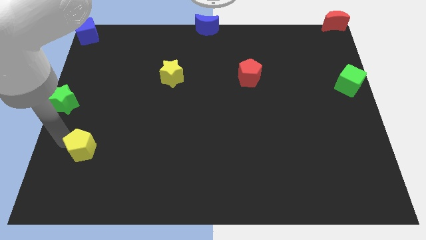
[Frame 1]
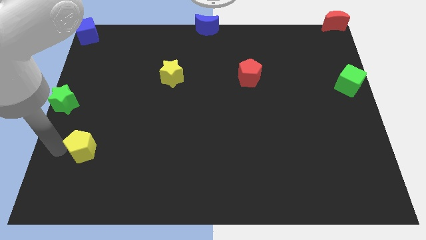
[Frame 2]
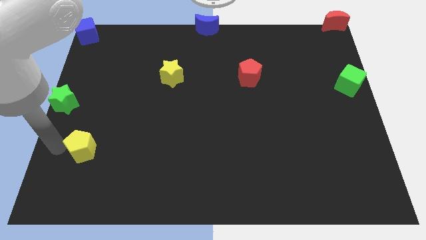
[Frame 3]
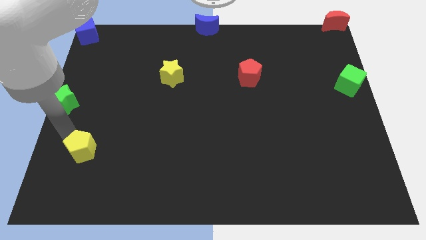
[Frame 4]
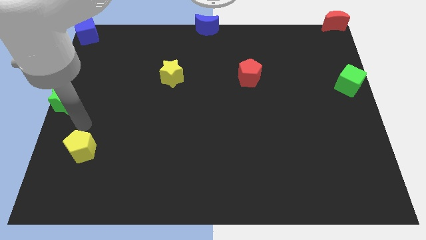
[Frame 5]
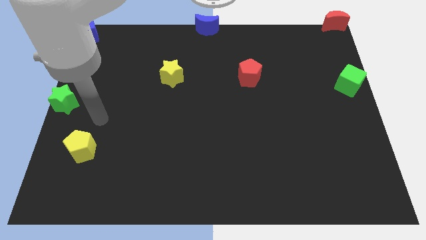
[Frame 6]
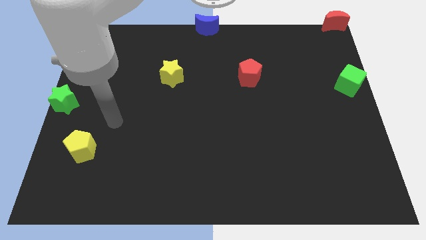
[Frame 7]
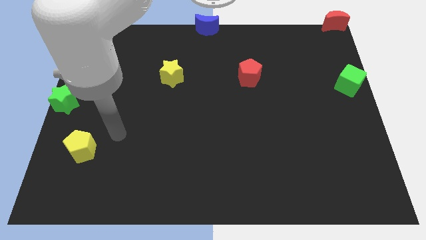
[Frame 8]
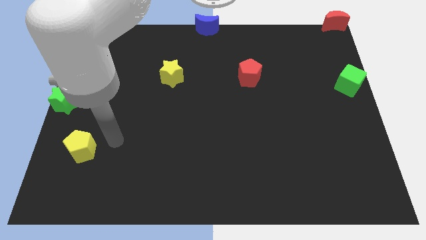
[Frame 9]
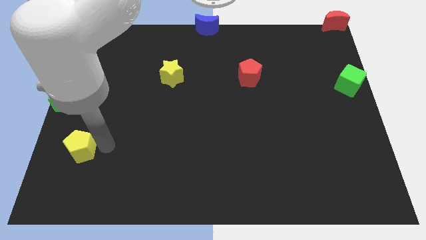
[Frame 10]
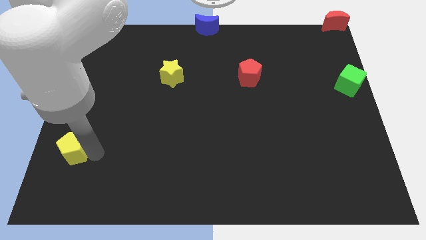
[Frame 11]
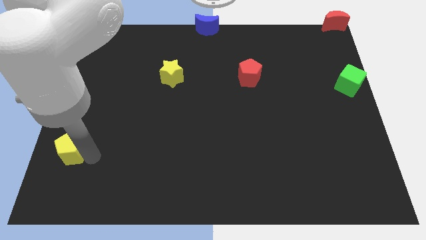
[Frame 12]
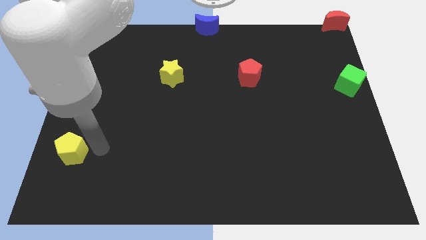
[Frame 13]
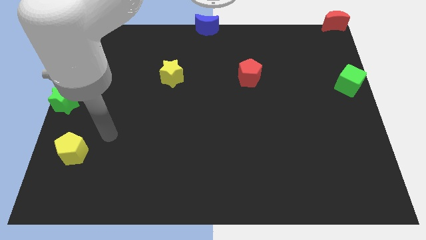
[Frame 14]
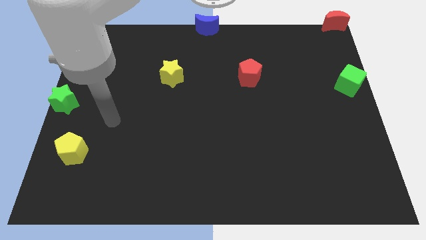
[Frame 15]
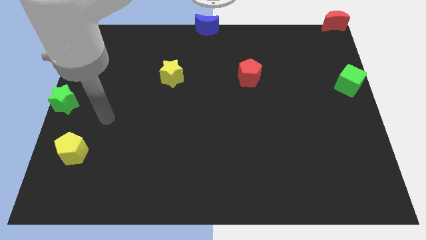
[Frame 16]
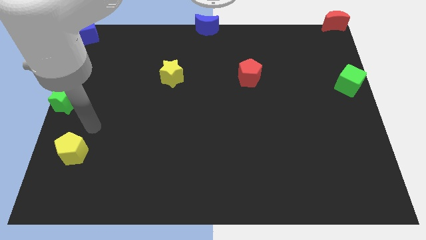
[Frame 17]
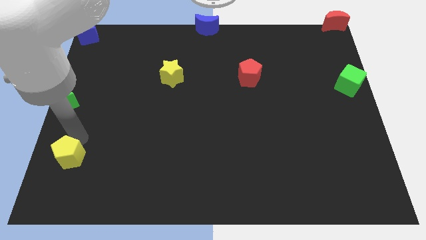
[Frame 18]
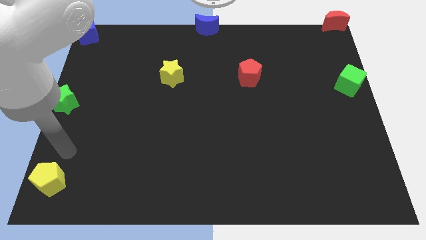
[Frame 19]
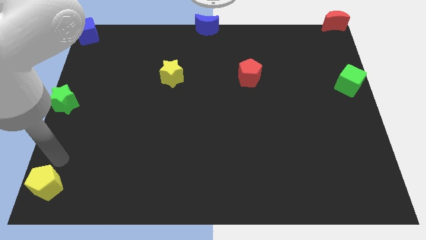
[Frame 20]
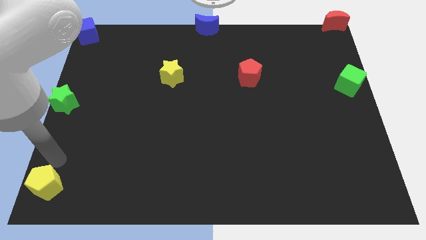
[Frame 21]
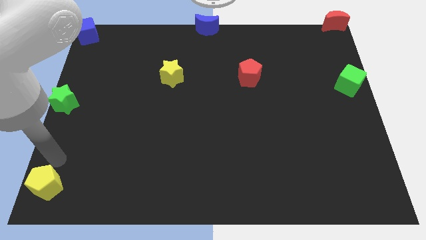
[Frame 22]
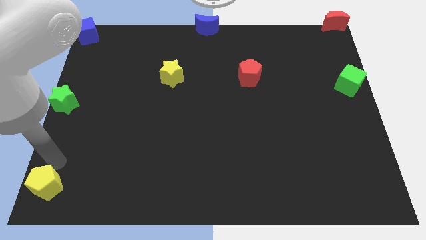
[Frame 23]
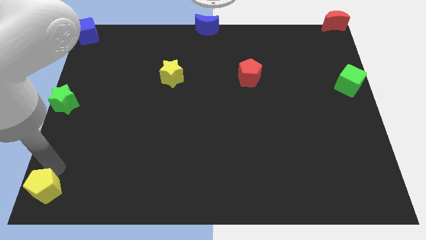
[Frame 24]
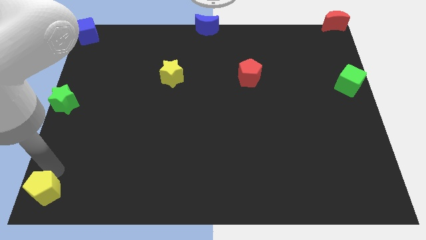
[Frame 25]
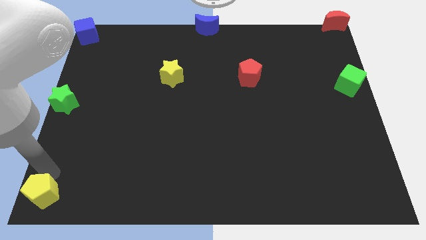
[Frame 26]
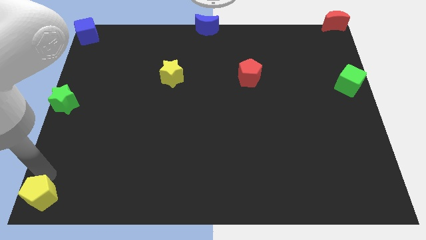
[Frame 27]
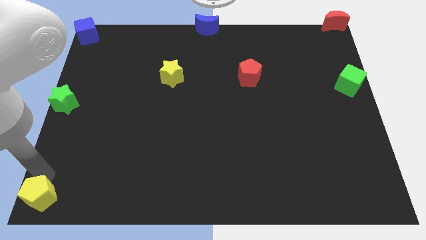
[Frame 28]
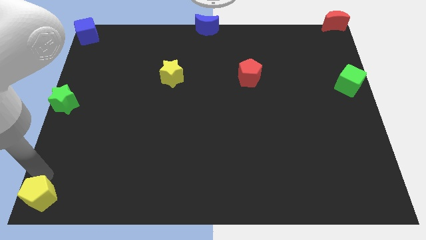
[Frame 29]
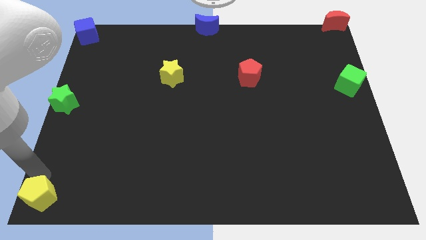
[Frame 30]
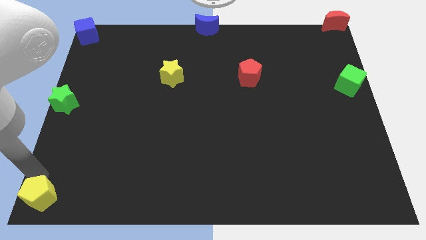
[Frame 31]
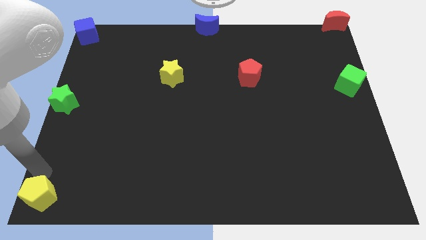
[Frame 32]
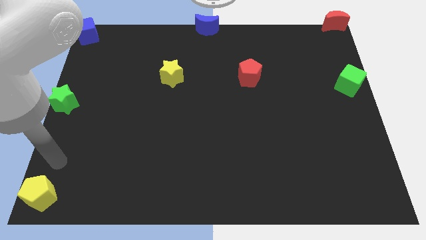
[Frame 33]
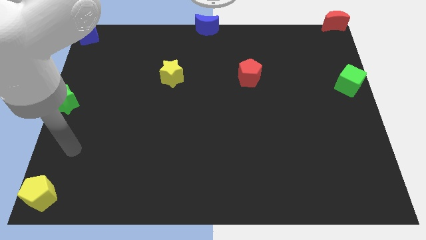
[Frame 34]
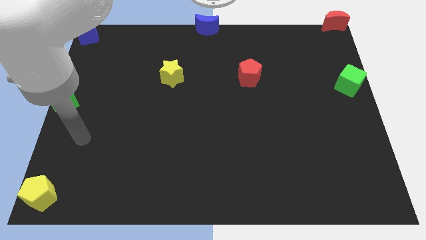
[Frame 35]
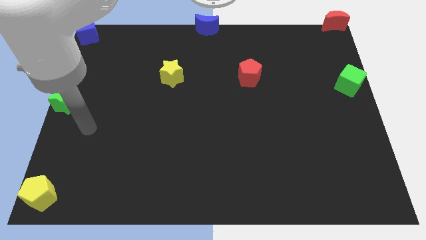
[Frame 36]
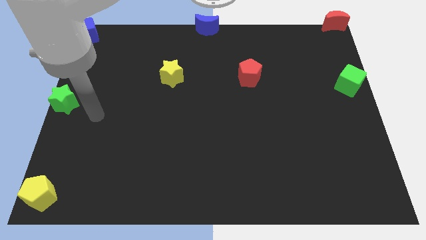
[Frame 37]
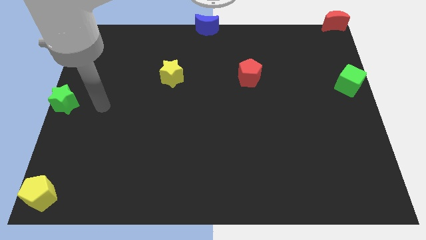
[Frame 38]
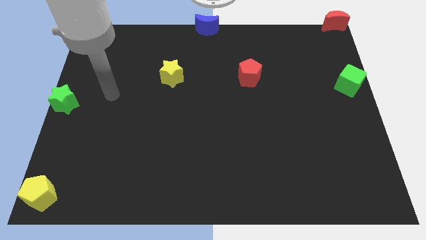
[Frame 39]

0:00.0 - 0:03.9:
push the yellow pentagon towards the bottom left corner of the board

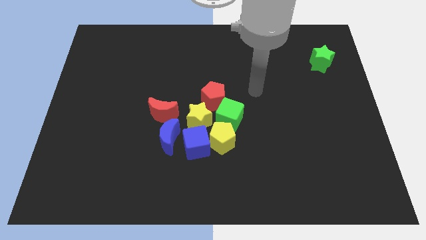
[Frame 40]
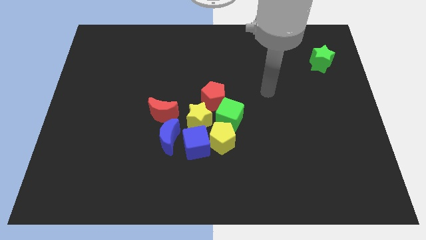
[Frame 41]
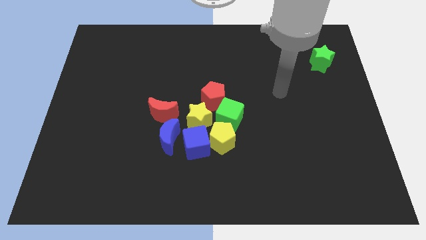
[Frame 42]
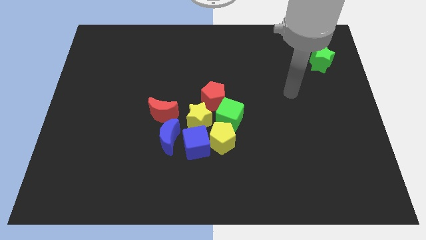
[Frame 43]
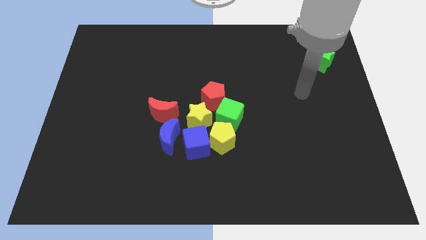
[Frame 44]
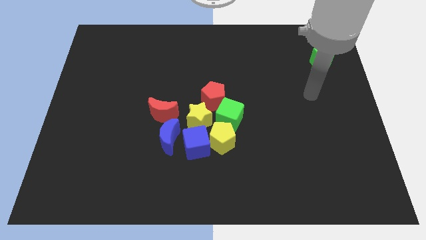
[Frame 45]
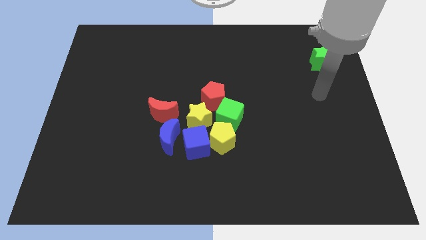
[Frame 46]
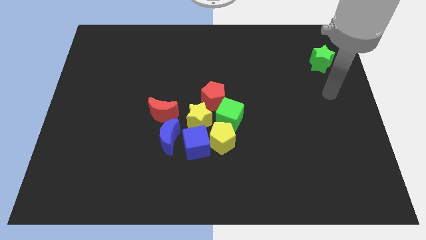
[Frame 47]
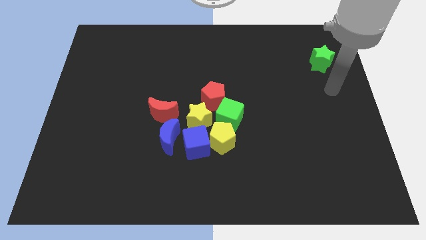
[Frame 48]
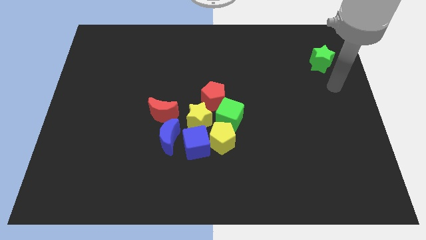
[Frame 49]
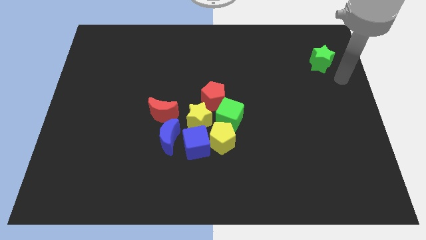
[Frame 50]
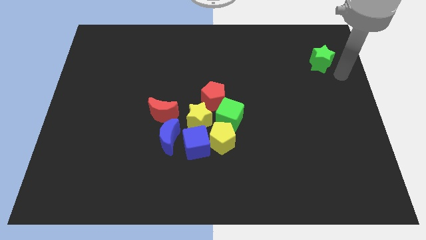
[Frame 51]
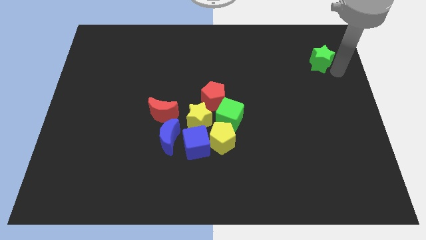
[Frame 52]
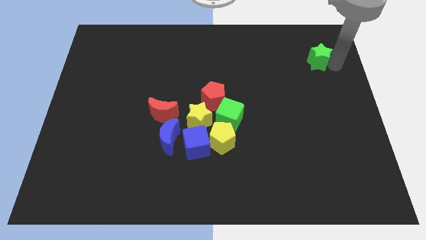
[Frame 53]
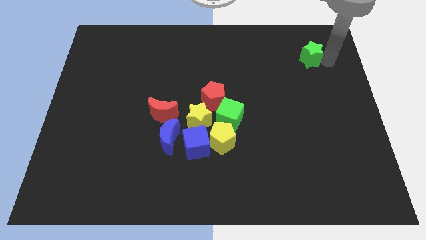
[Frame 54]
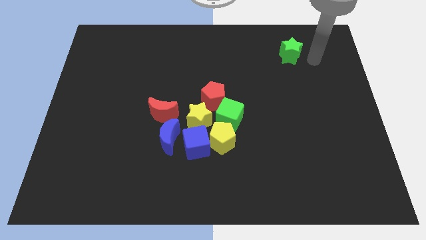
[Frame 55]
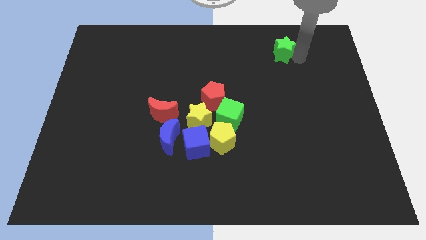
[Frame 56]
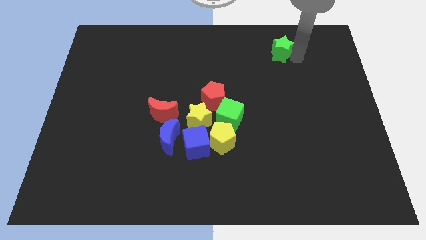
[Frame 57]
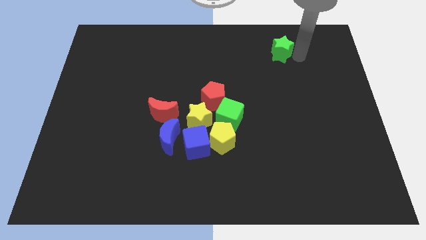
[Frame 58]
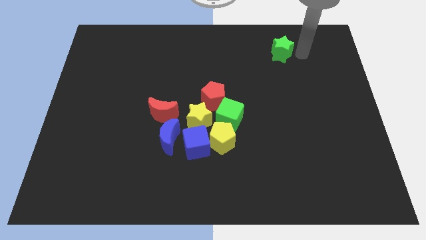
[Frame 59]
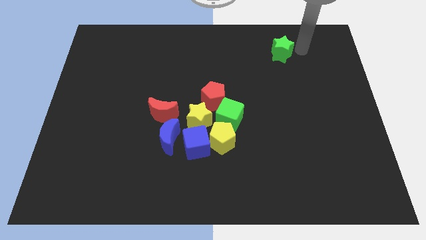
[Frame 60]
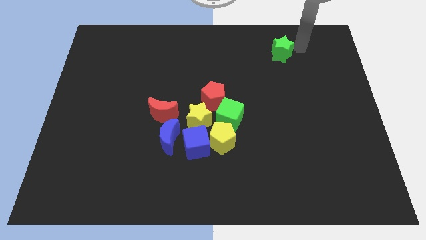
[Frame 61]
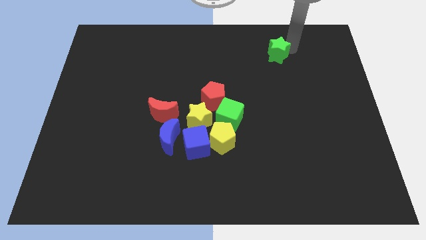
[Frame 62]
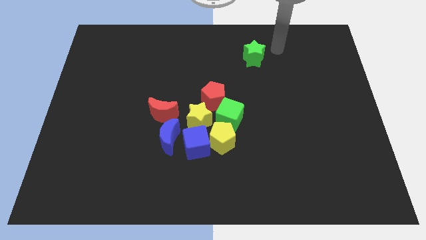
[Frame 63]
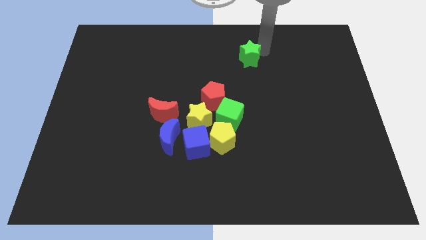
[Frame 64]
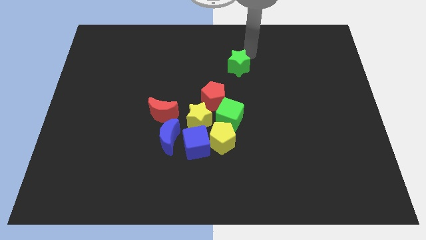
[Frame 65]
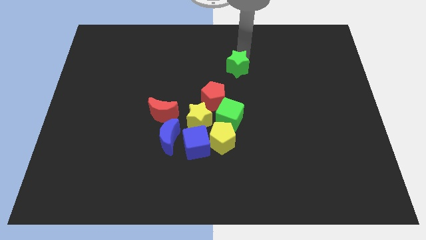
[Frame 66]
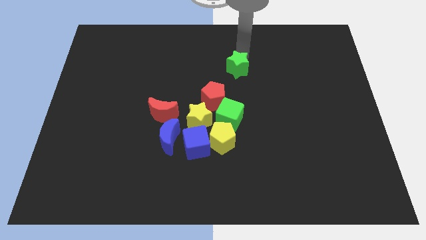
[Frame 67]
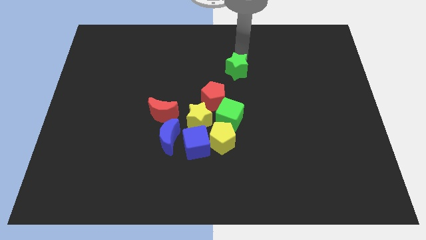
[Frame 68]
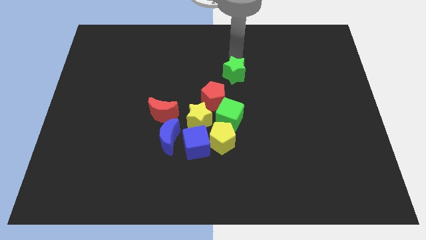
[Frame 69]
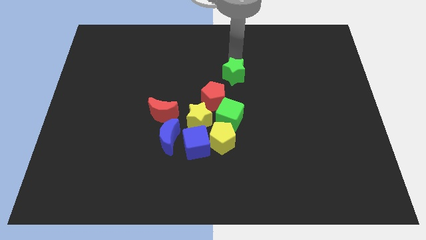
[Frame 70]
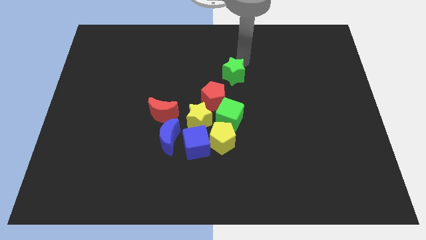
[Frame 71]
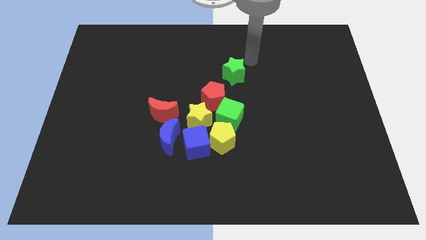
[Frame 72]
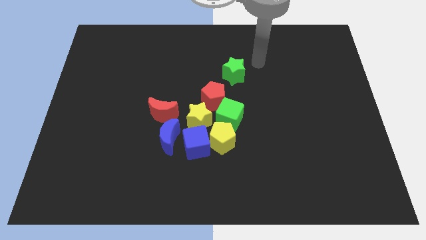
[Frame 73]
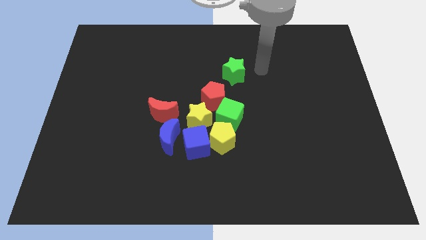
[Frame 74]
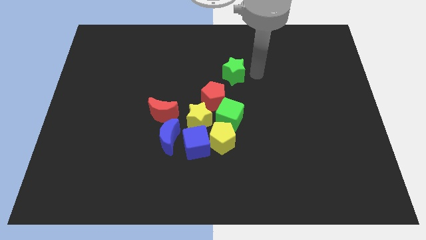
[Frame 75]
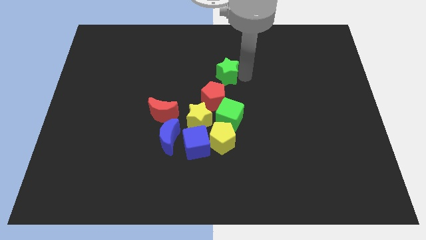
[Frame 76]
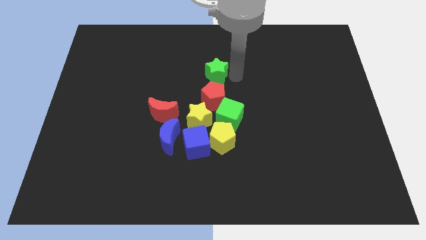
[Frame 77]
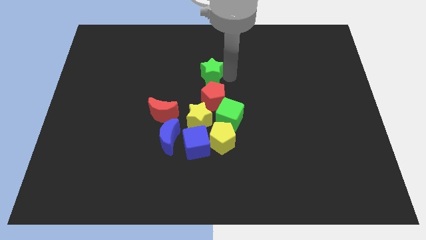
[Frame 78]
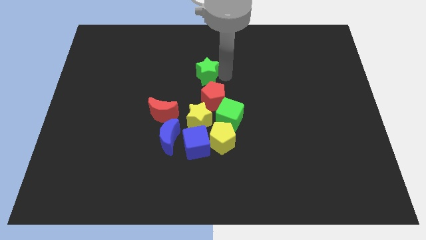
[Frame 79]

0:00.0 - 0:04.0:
move the green star to the top of the red pentagon

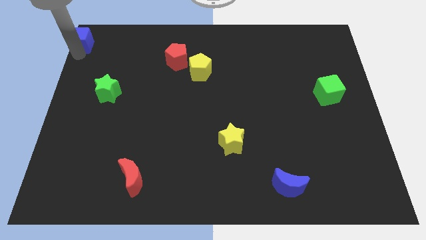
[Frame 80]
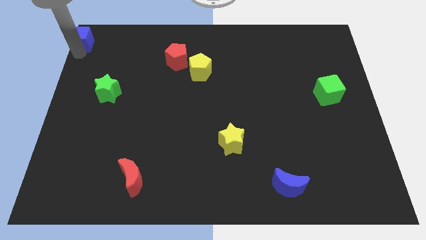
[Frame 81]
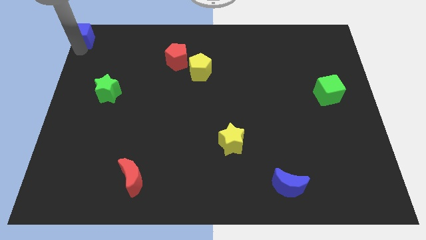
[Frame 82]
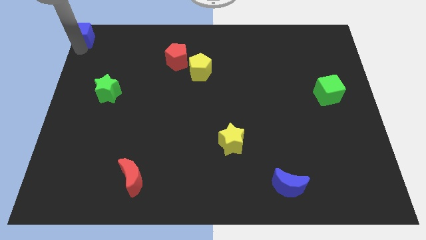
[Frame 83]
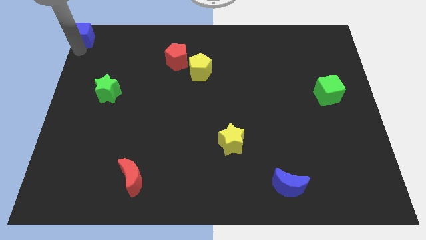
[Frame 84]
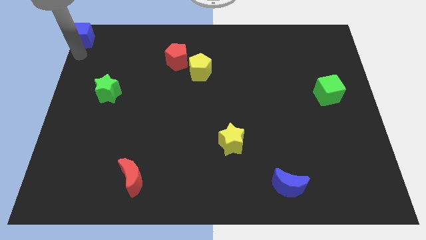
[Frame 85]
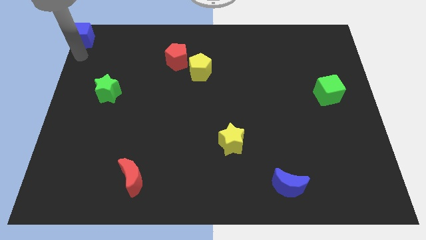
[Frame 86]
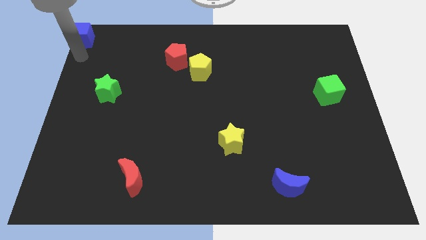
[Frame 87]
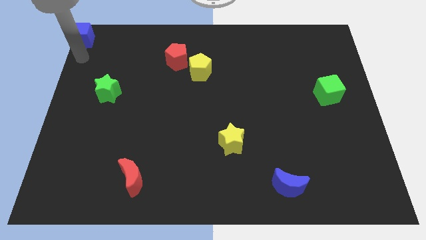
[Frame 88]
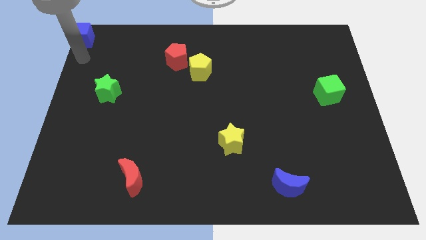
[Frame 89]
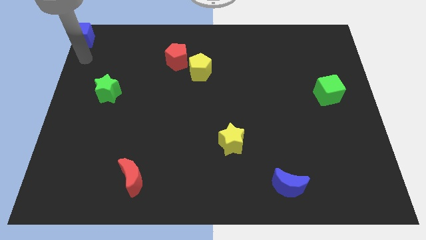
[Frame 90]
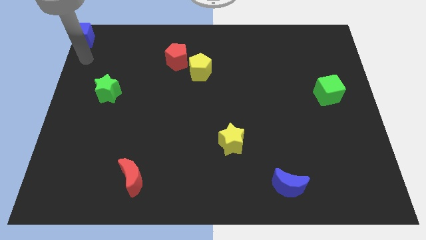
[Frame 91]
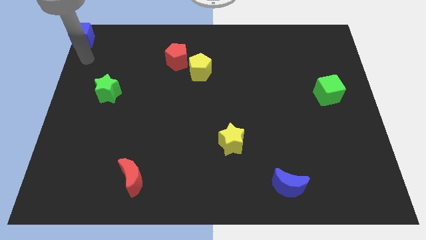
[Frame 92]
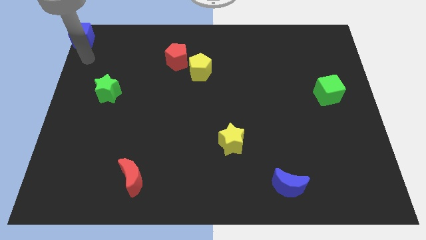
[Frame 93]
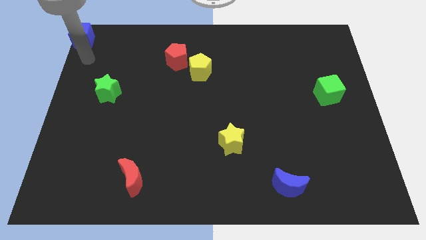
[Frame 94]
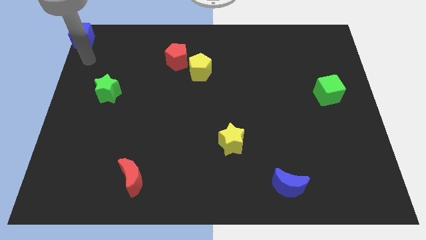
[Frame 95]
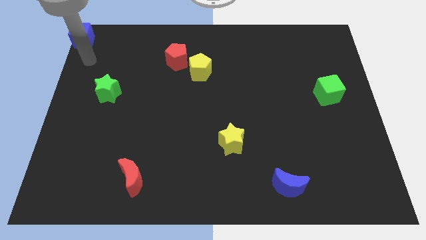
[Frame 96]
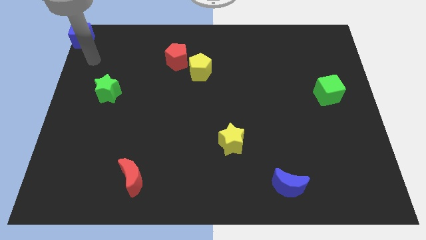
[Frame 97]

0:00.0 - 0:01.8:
push blue cube to the top left corner of the board
